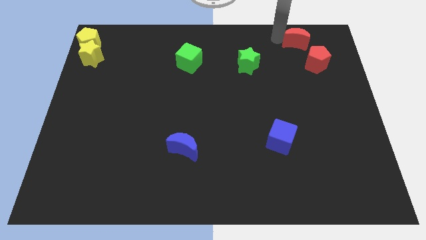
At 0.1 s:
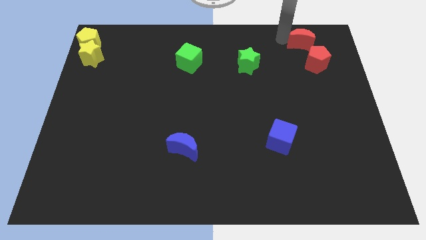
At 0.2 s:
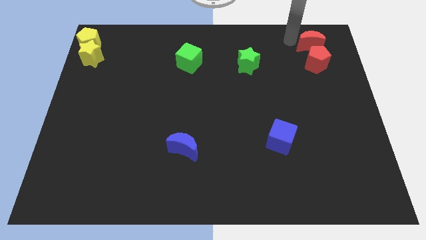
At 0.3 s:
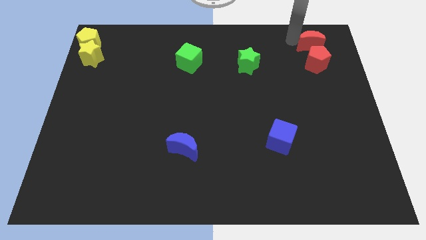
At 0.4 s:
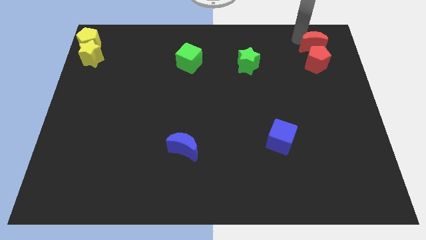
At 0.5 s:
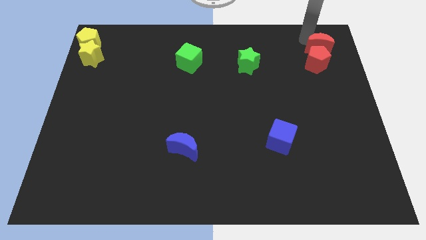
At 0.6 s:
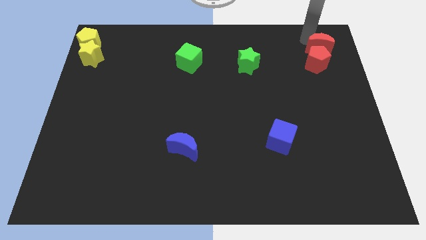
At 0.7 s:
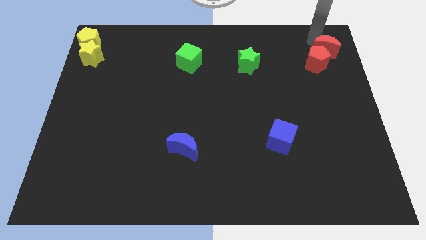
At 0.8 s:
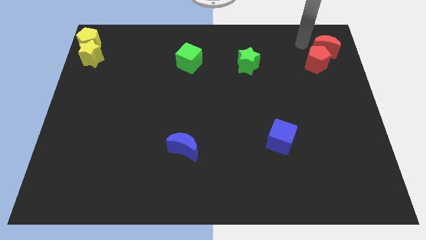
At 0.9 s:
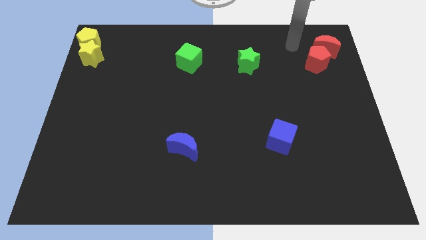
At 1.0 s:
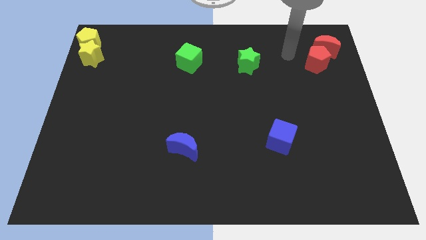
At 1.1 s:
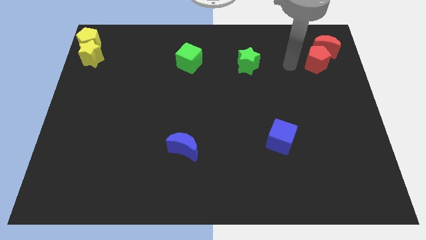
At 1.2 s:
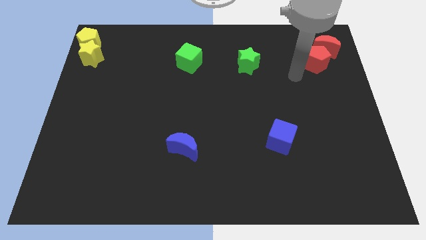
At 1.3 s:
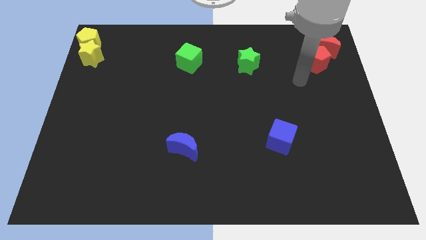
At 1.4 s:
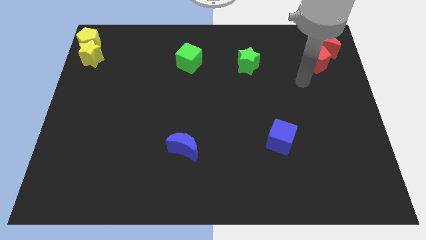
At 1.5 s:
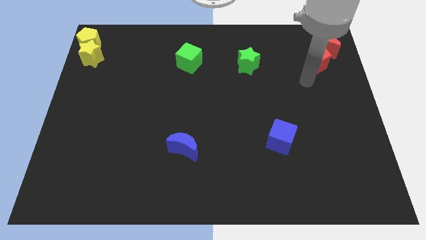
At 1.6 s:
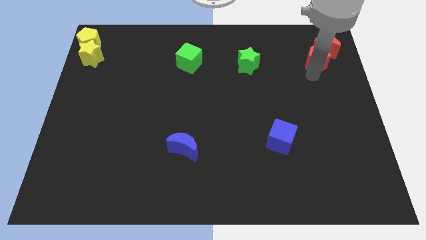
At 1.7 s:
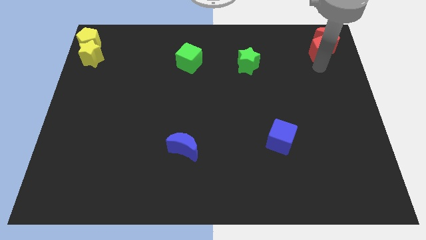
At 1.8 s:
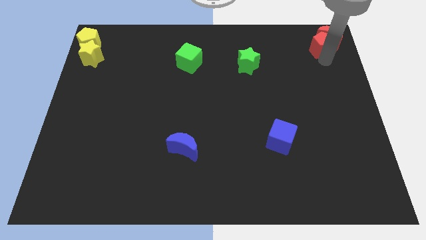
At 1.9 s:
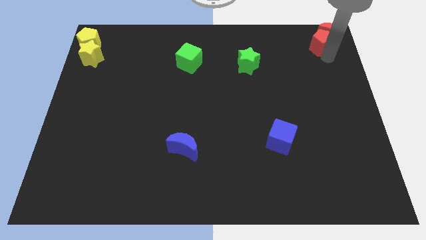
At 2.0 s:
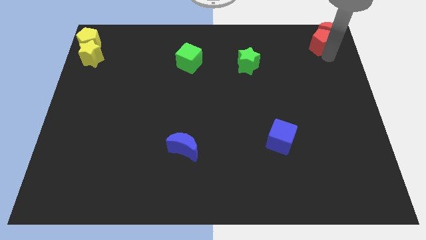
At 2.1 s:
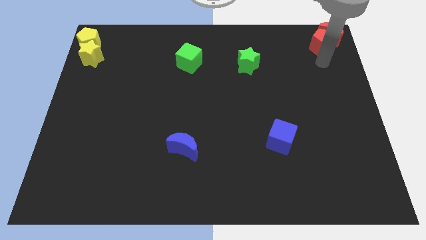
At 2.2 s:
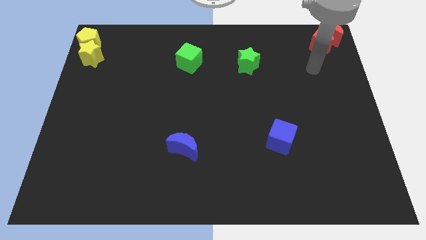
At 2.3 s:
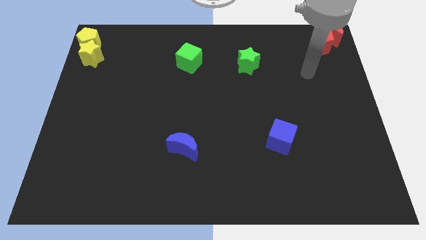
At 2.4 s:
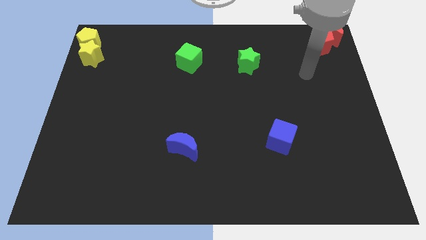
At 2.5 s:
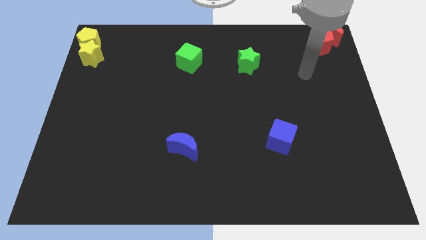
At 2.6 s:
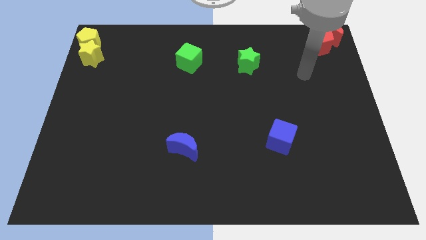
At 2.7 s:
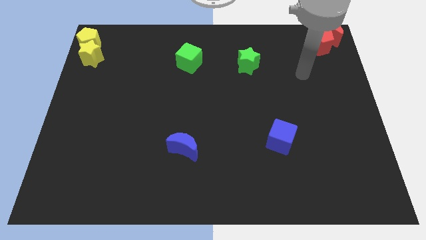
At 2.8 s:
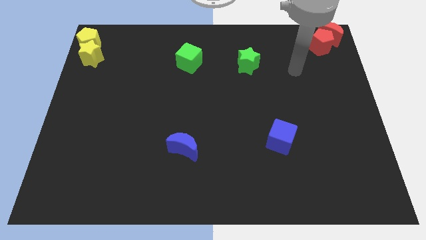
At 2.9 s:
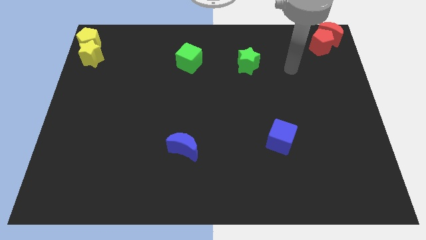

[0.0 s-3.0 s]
place the red blocks at the top right corner of the board

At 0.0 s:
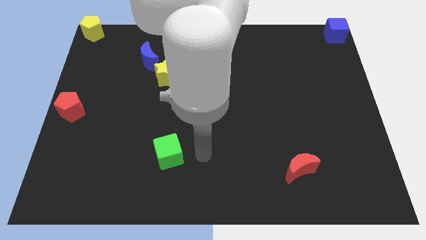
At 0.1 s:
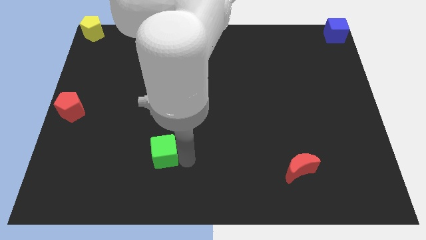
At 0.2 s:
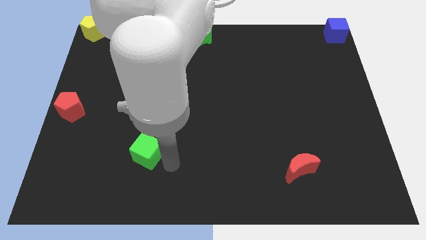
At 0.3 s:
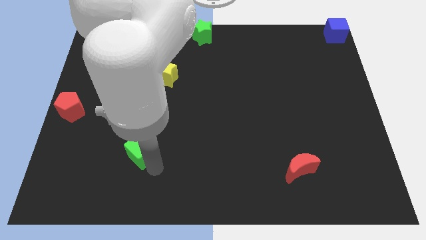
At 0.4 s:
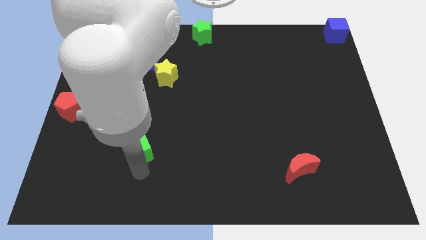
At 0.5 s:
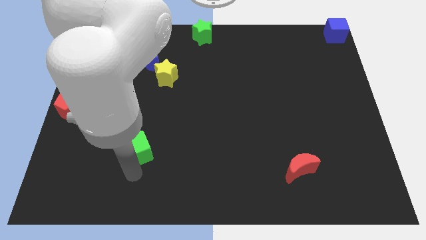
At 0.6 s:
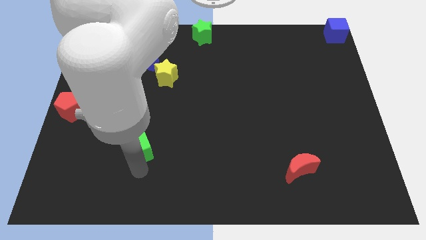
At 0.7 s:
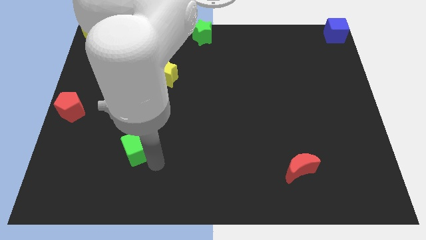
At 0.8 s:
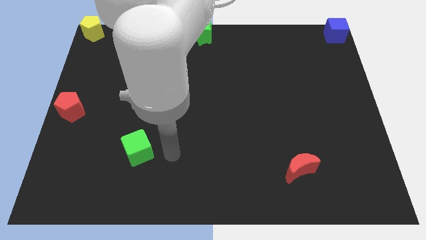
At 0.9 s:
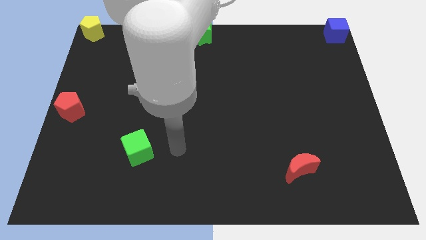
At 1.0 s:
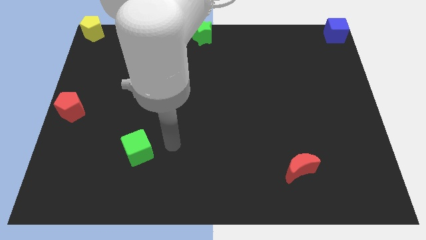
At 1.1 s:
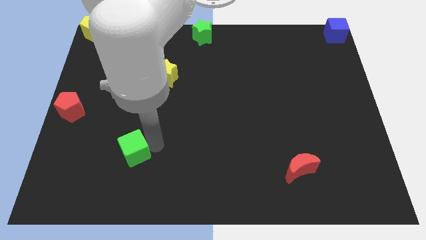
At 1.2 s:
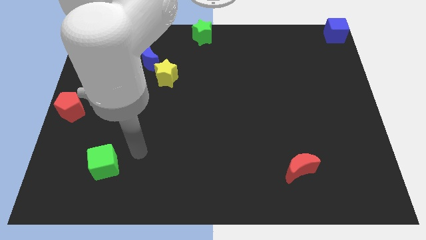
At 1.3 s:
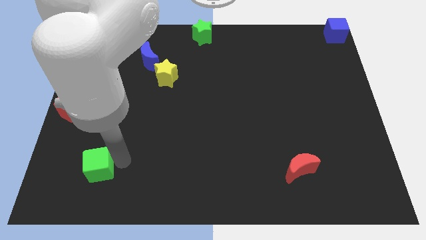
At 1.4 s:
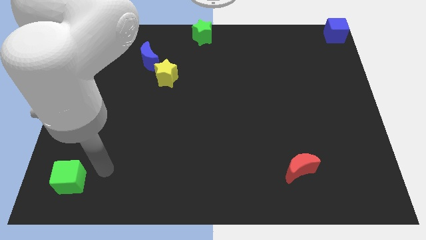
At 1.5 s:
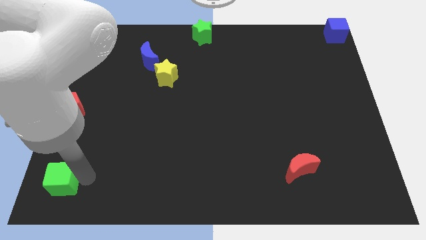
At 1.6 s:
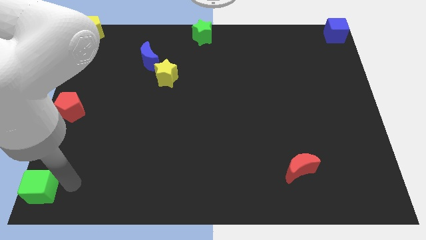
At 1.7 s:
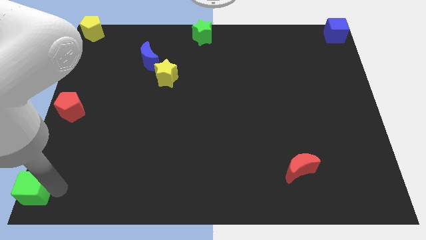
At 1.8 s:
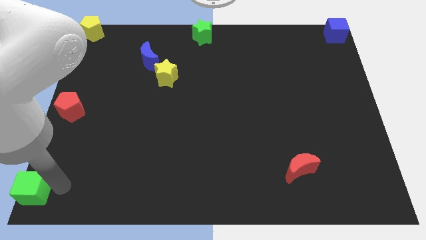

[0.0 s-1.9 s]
move green cube to the bottom left corner of the board

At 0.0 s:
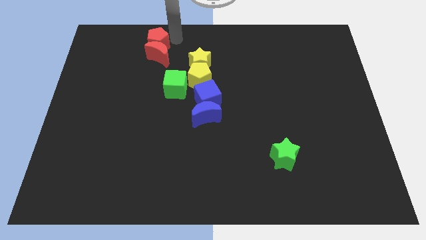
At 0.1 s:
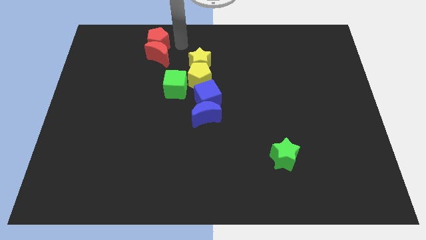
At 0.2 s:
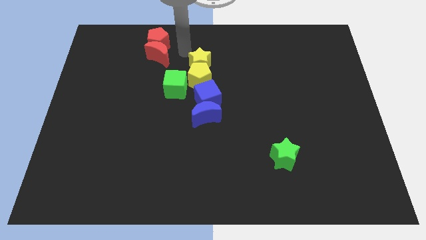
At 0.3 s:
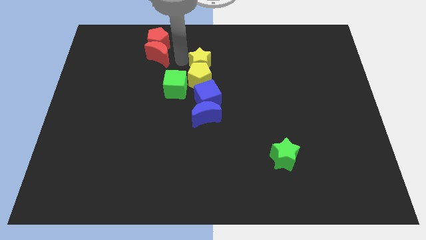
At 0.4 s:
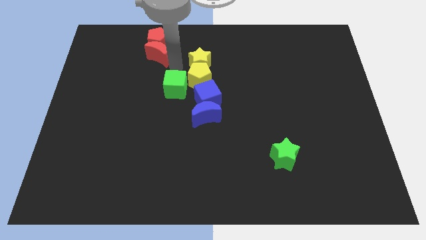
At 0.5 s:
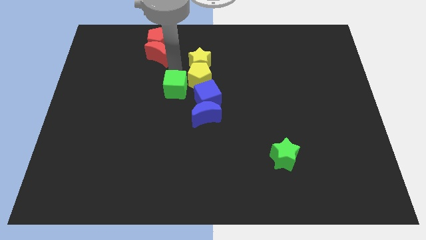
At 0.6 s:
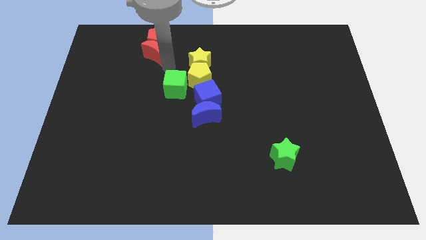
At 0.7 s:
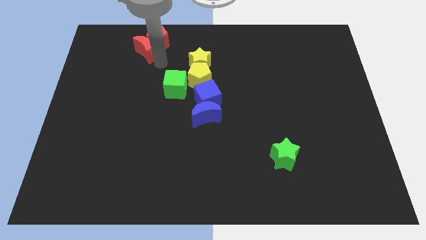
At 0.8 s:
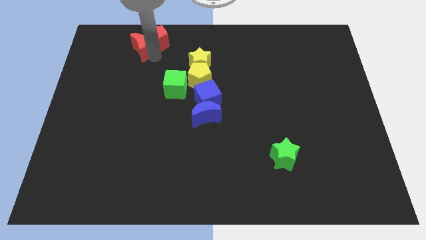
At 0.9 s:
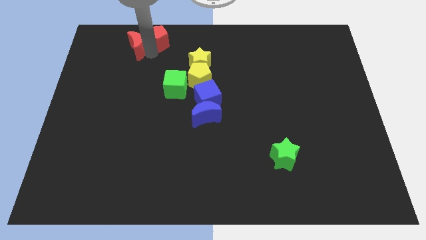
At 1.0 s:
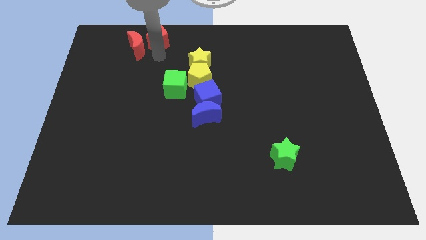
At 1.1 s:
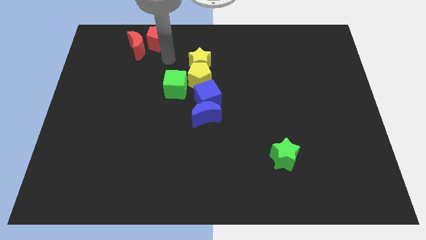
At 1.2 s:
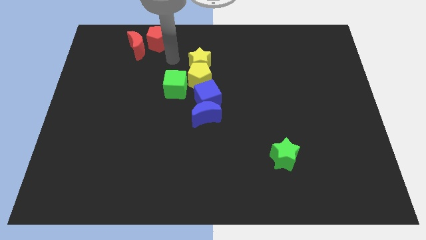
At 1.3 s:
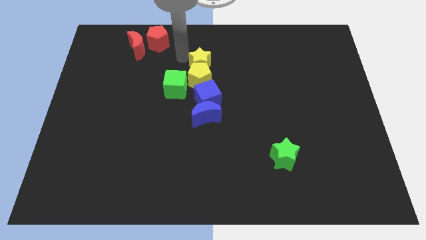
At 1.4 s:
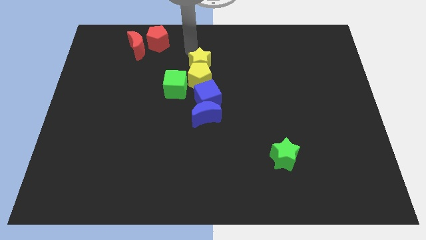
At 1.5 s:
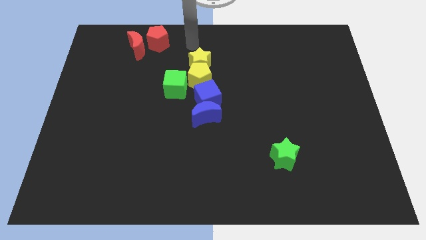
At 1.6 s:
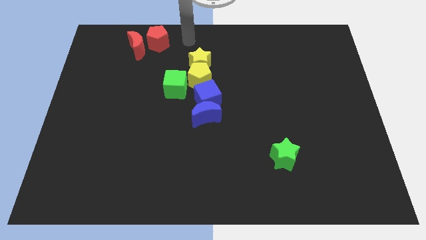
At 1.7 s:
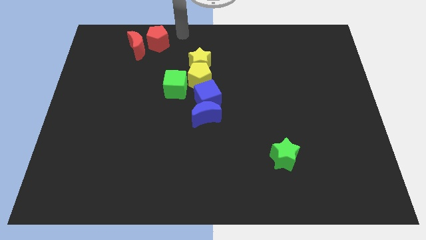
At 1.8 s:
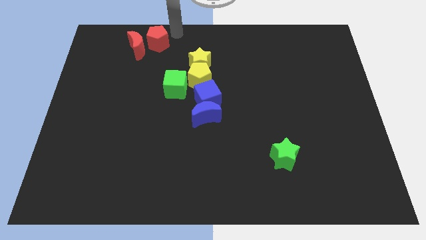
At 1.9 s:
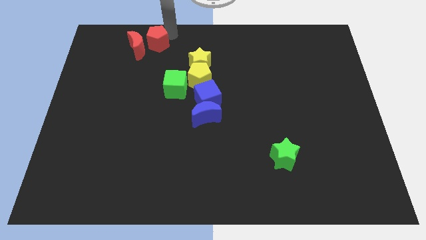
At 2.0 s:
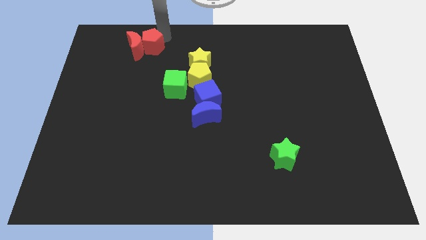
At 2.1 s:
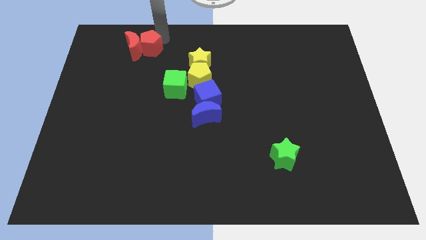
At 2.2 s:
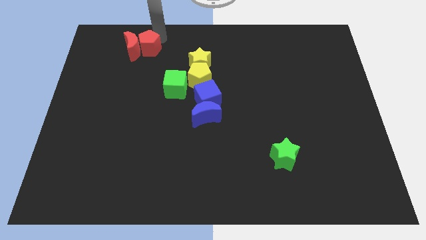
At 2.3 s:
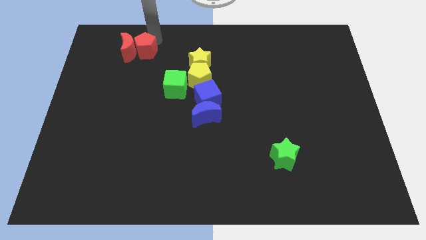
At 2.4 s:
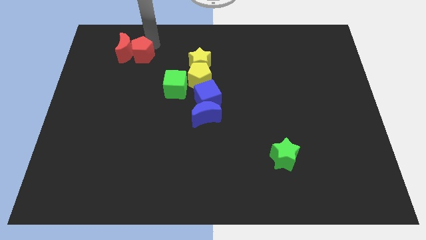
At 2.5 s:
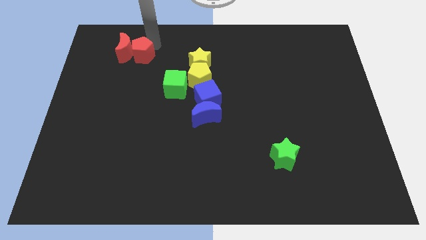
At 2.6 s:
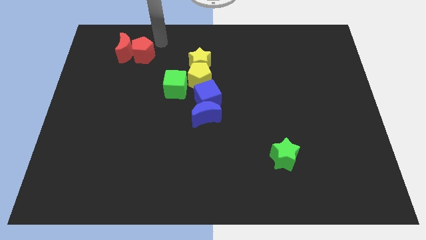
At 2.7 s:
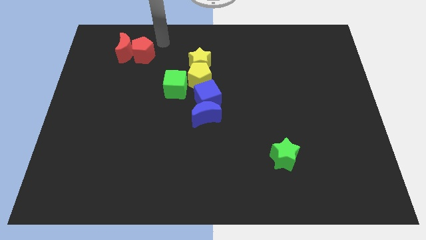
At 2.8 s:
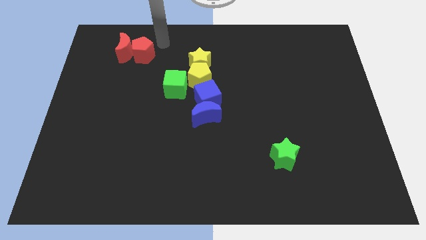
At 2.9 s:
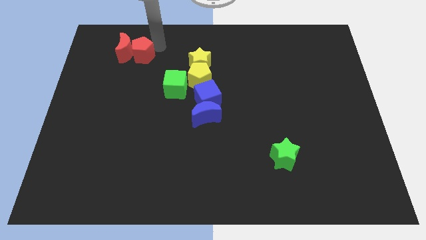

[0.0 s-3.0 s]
push red pentagon to the right of red crescent

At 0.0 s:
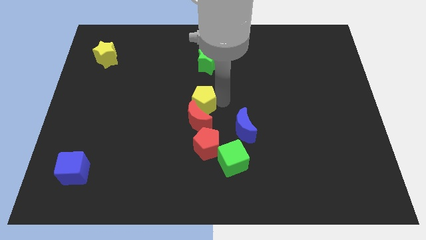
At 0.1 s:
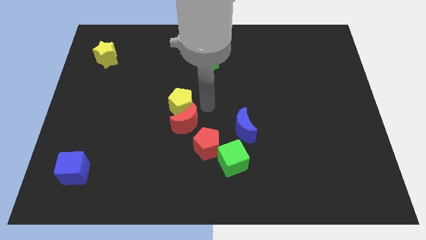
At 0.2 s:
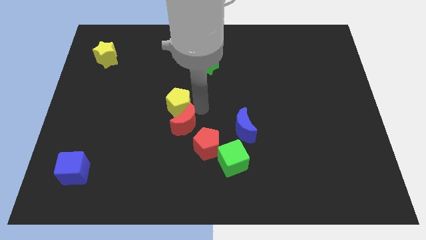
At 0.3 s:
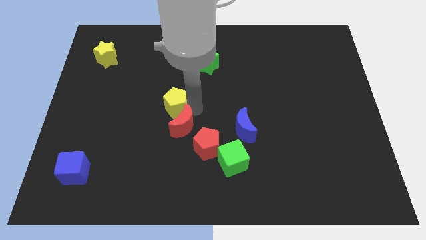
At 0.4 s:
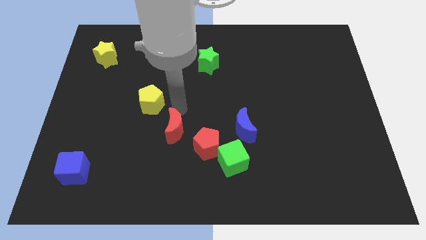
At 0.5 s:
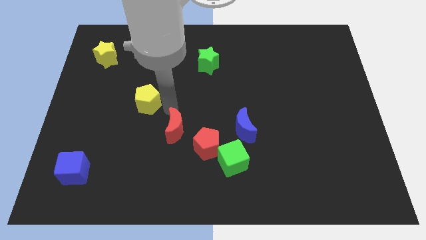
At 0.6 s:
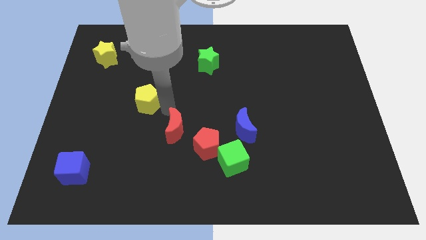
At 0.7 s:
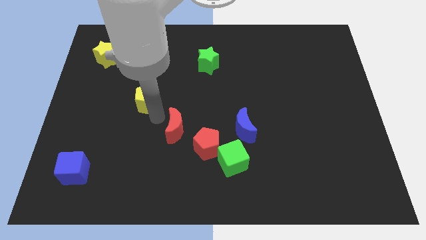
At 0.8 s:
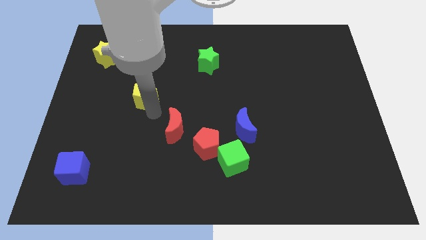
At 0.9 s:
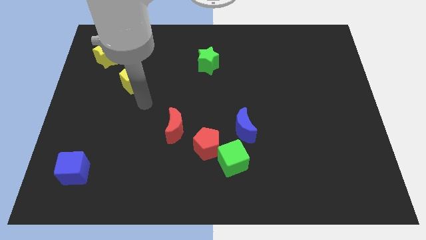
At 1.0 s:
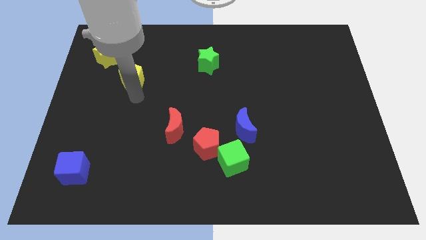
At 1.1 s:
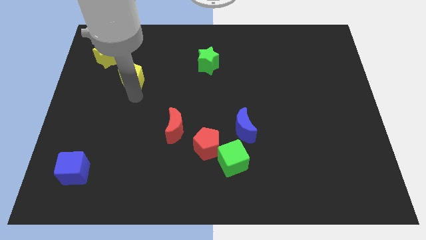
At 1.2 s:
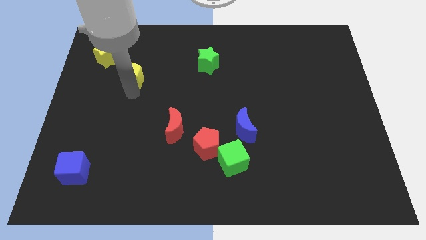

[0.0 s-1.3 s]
separate the yellow pentagon and red moon
